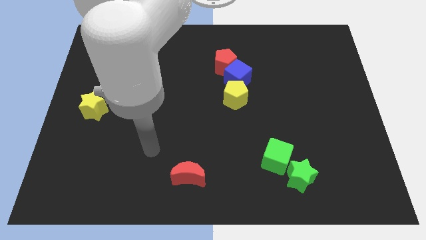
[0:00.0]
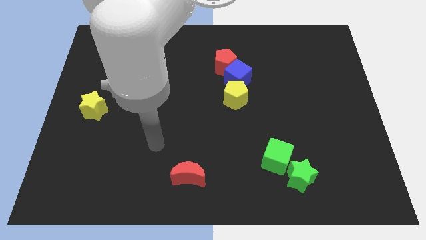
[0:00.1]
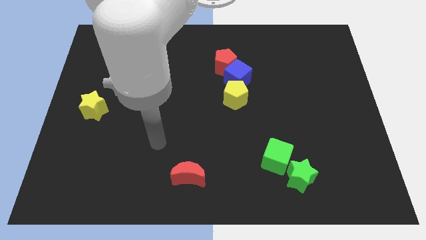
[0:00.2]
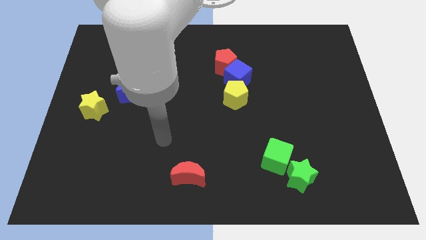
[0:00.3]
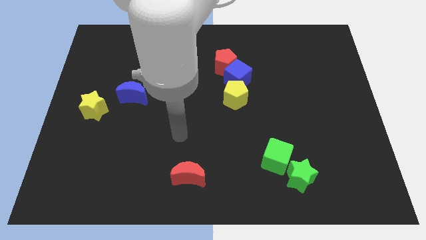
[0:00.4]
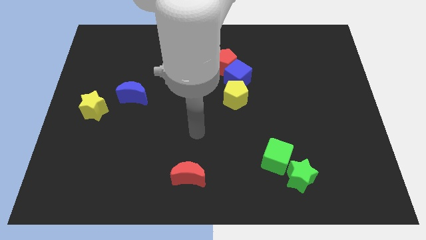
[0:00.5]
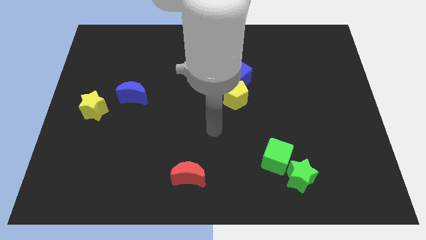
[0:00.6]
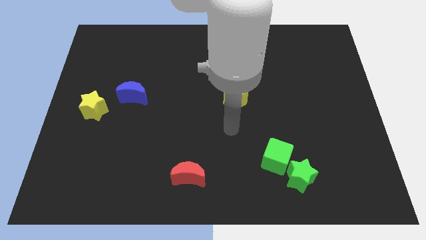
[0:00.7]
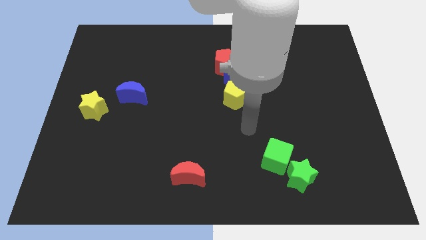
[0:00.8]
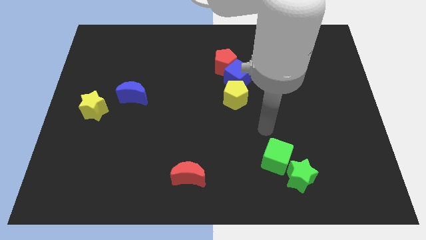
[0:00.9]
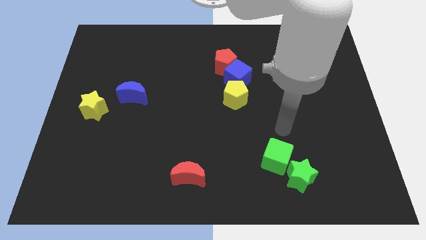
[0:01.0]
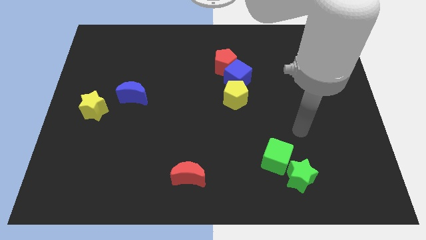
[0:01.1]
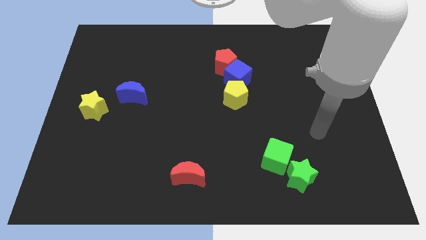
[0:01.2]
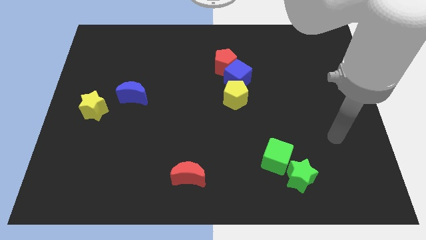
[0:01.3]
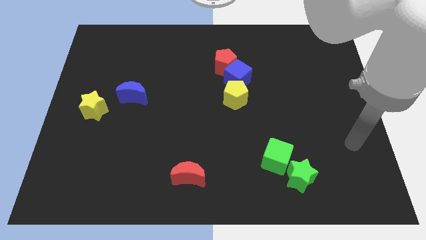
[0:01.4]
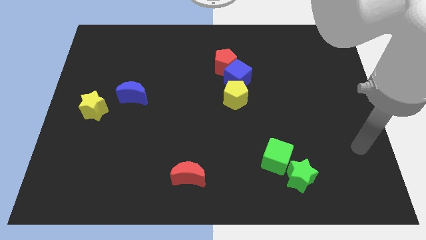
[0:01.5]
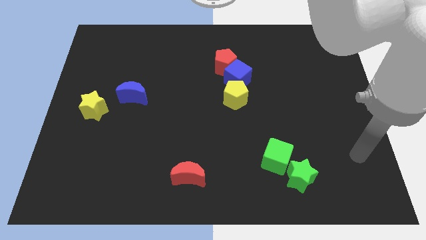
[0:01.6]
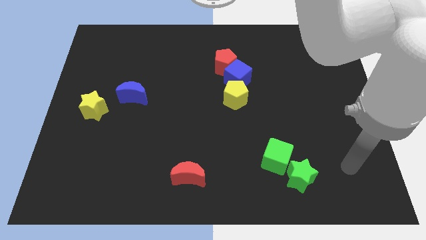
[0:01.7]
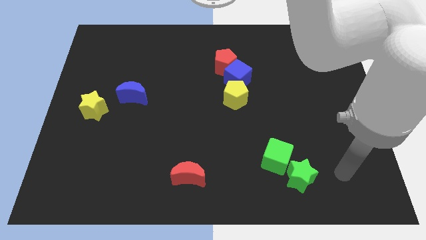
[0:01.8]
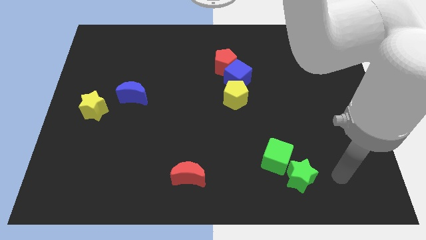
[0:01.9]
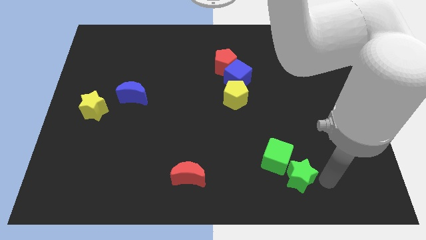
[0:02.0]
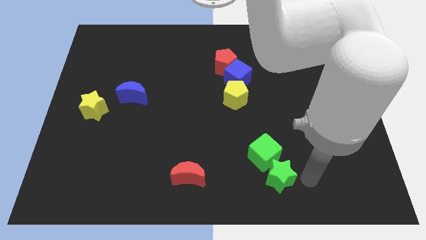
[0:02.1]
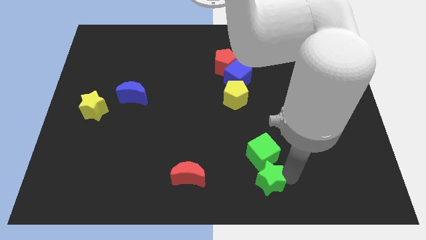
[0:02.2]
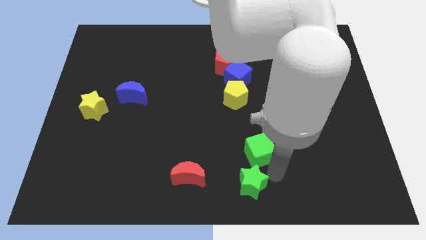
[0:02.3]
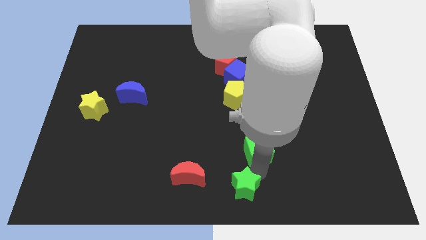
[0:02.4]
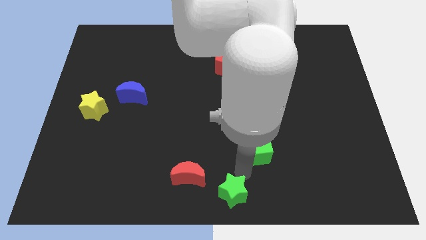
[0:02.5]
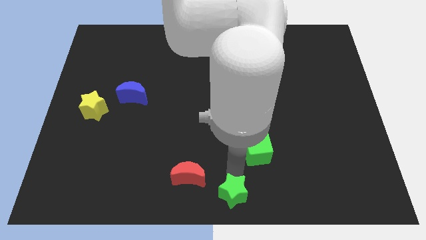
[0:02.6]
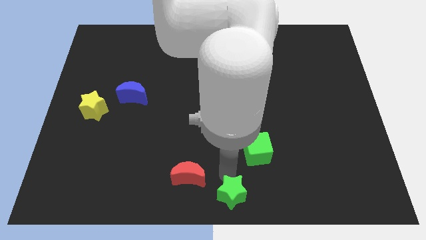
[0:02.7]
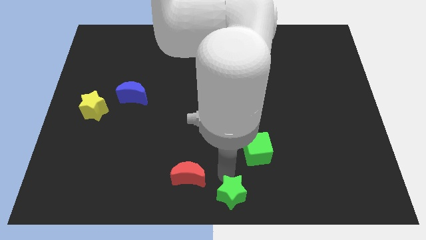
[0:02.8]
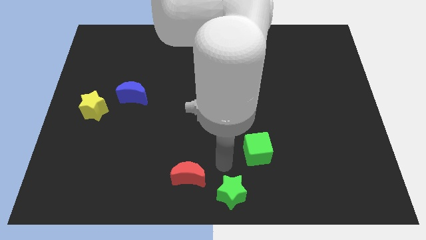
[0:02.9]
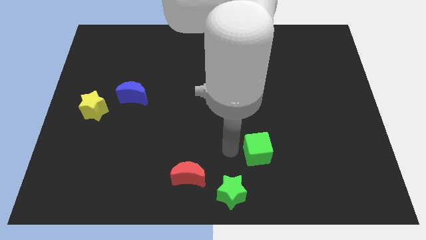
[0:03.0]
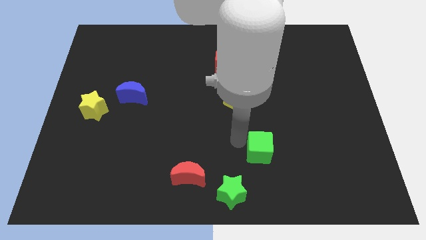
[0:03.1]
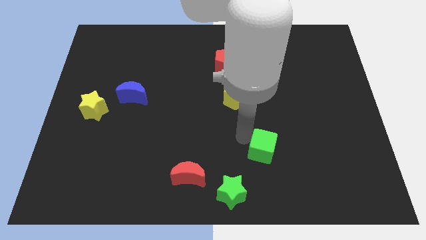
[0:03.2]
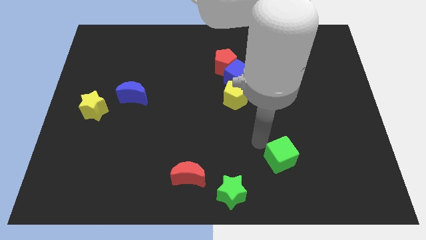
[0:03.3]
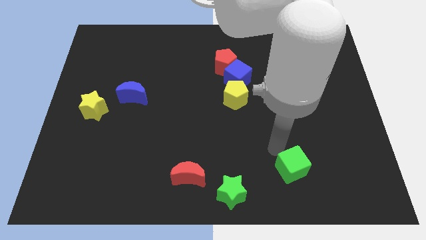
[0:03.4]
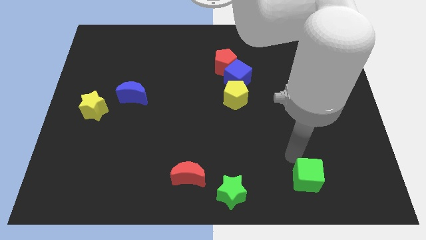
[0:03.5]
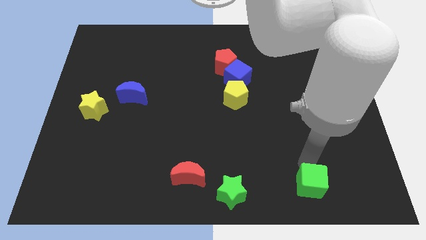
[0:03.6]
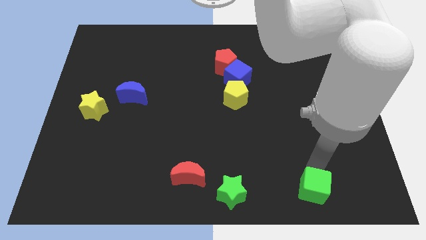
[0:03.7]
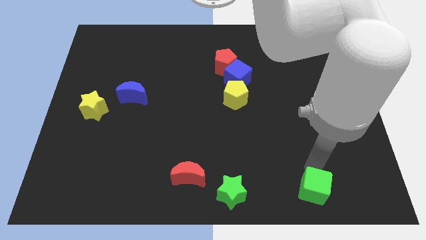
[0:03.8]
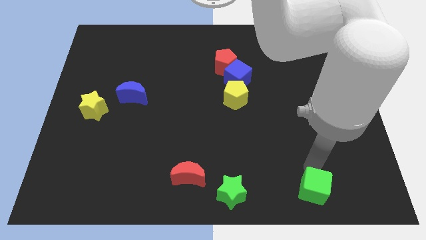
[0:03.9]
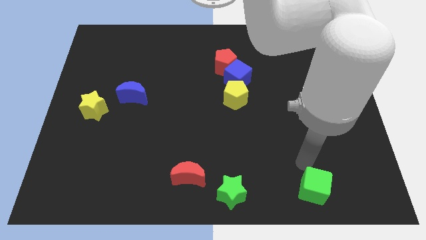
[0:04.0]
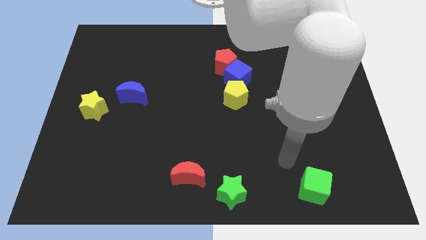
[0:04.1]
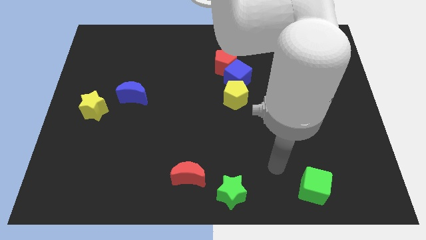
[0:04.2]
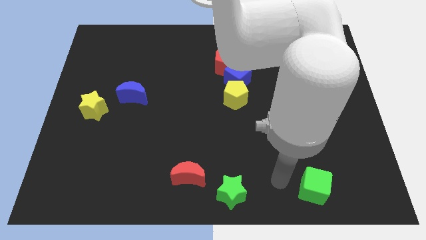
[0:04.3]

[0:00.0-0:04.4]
move the green blocks to the bottom of the board

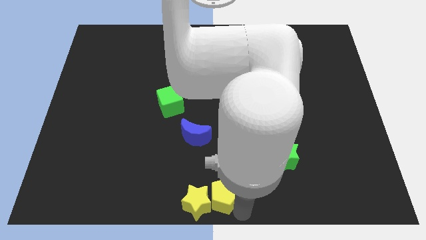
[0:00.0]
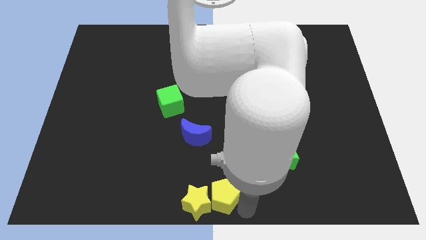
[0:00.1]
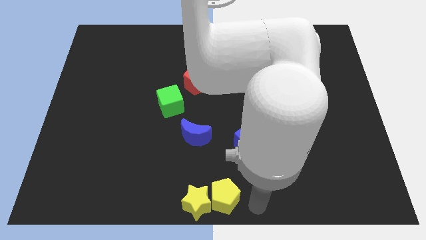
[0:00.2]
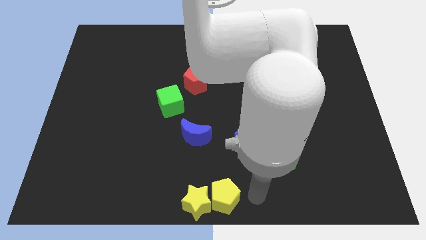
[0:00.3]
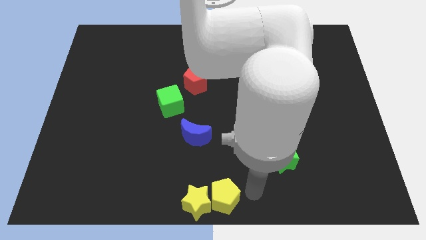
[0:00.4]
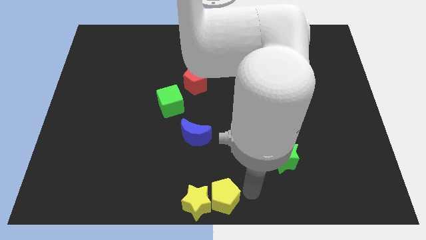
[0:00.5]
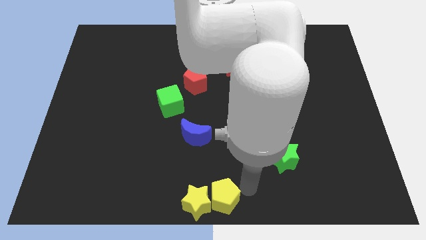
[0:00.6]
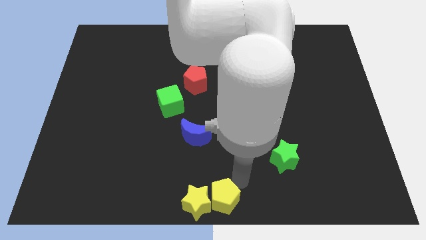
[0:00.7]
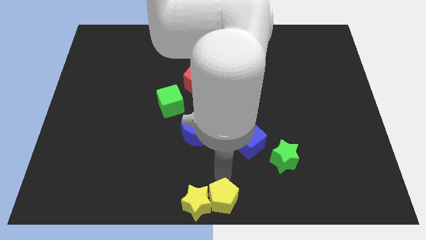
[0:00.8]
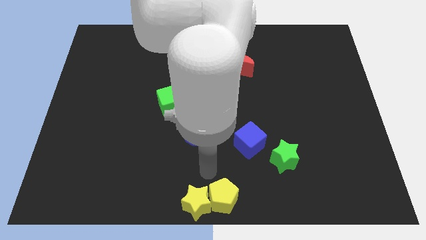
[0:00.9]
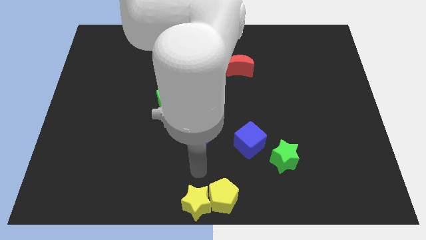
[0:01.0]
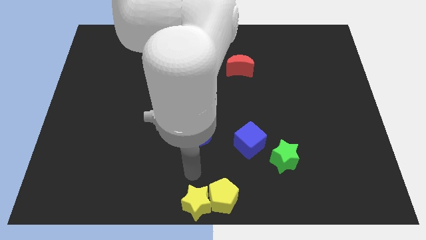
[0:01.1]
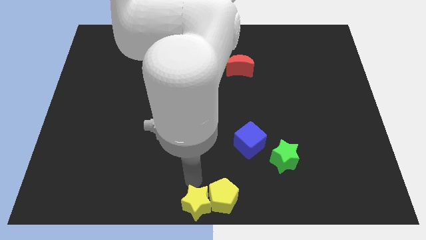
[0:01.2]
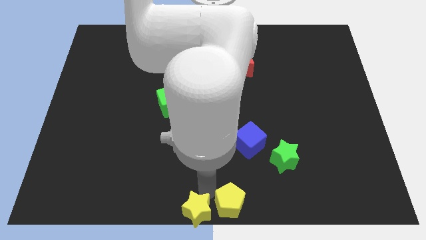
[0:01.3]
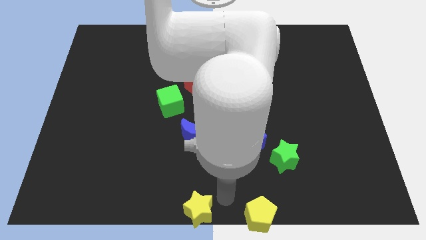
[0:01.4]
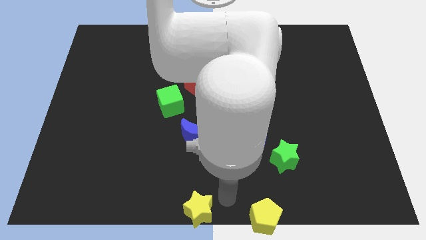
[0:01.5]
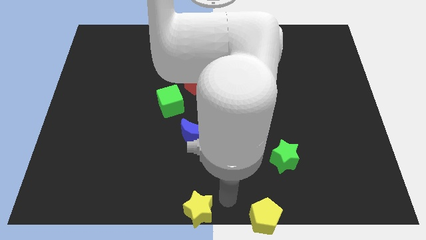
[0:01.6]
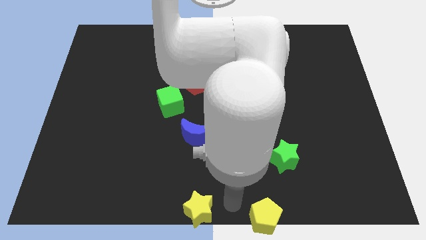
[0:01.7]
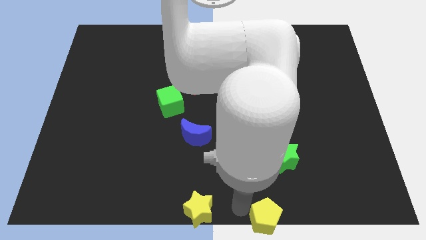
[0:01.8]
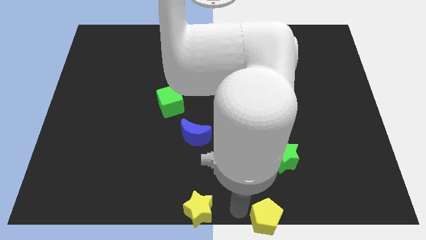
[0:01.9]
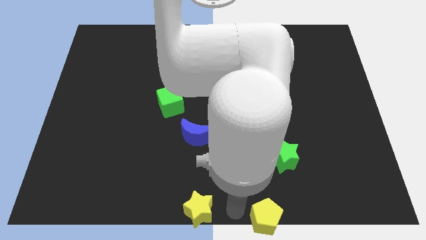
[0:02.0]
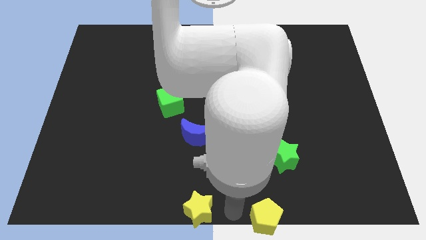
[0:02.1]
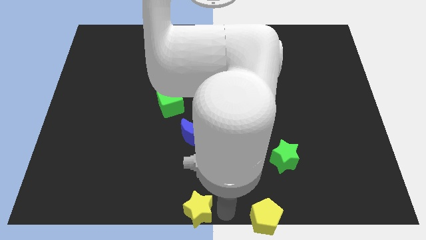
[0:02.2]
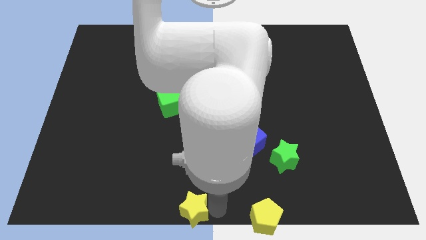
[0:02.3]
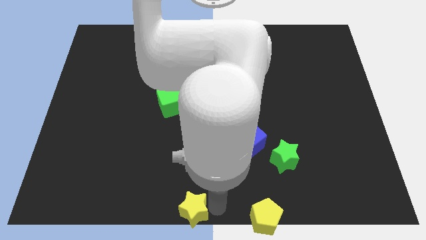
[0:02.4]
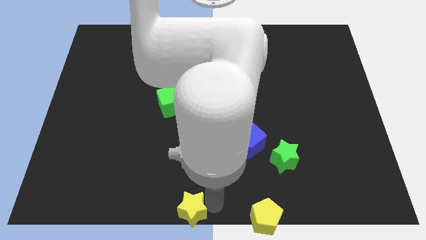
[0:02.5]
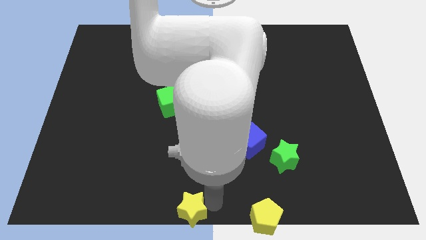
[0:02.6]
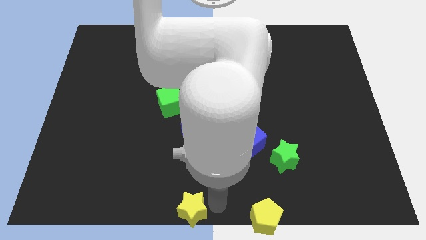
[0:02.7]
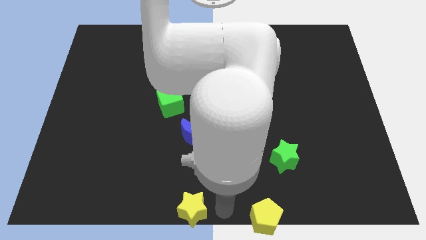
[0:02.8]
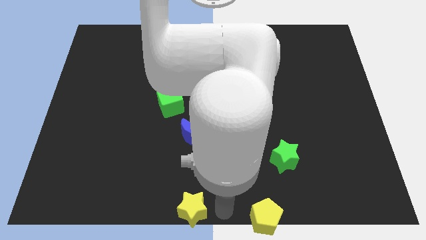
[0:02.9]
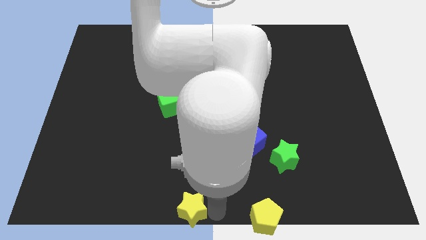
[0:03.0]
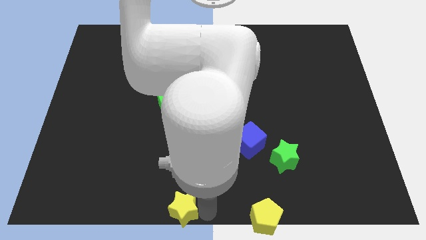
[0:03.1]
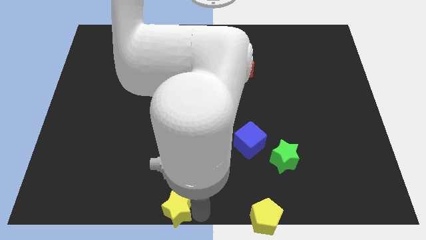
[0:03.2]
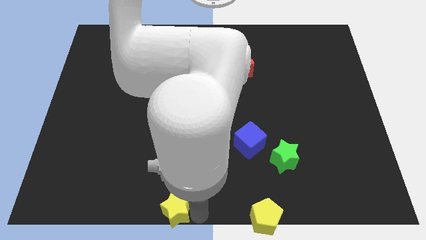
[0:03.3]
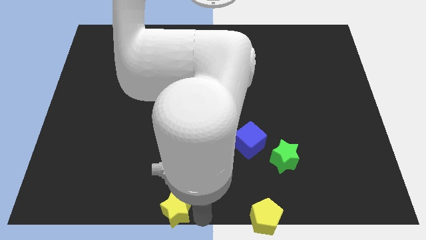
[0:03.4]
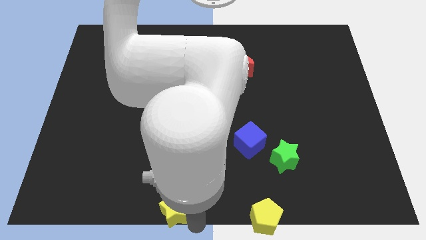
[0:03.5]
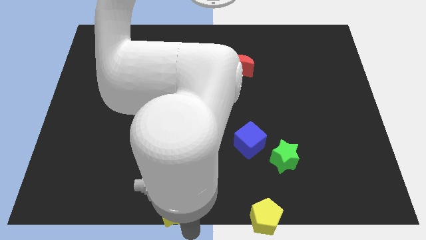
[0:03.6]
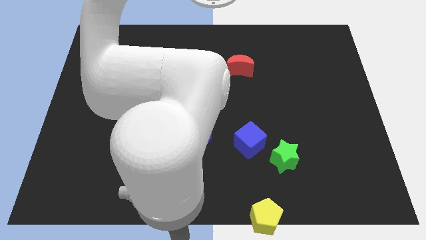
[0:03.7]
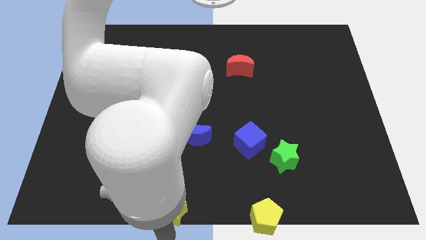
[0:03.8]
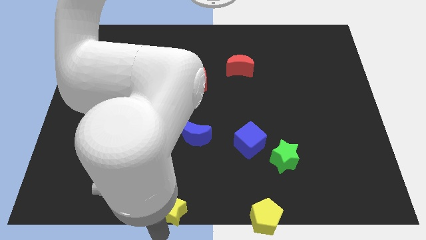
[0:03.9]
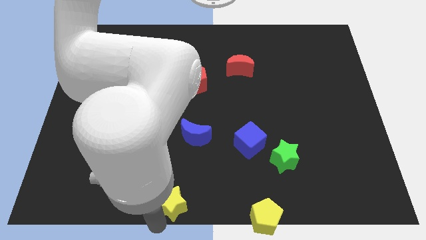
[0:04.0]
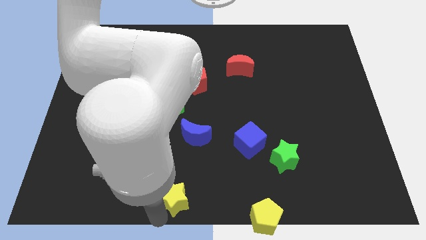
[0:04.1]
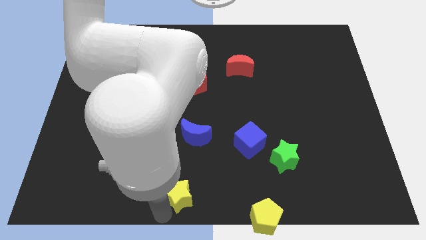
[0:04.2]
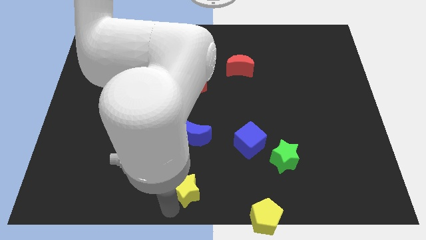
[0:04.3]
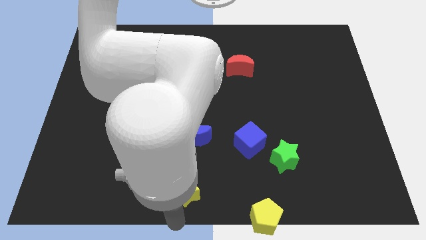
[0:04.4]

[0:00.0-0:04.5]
separate the yellow blocks

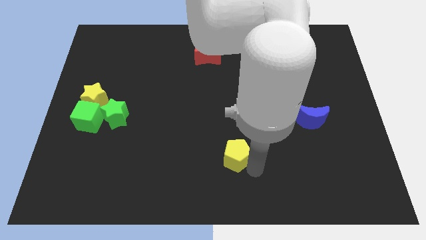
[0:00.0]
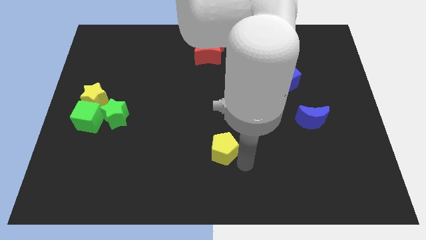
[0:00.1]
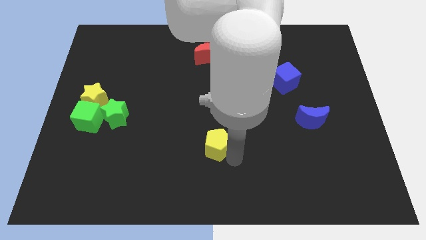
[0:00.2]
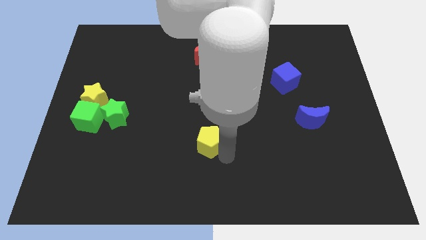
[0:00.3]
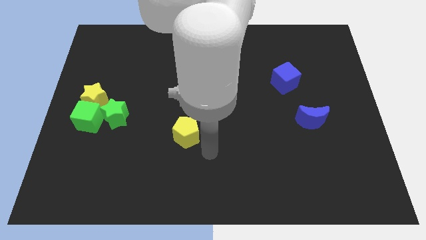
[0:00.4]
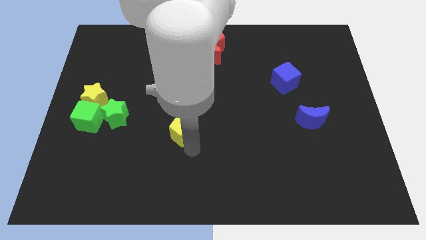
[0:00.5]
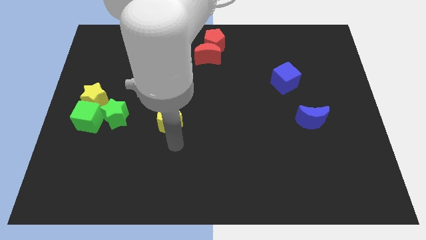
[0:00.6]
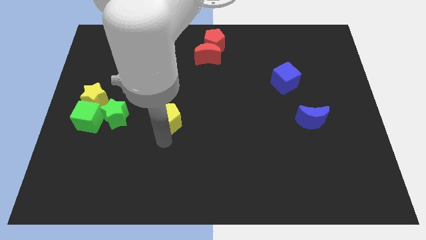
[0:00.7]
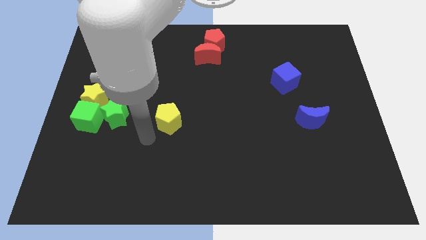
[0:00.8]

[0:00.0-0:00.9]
move the yellow pentagon parallel to the green star
